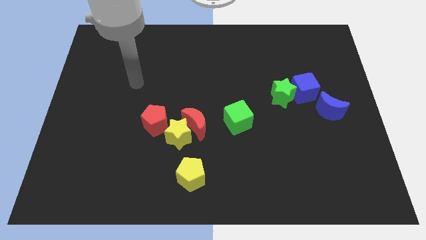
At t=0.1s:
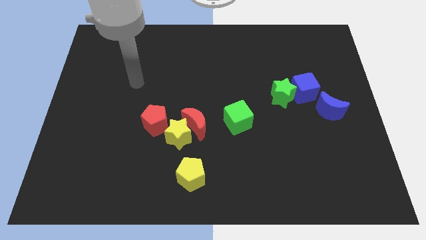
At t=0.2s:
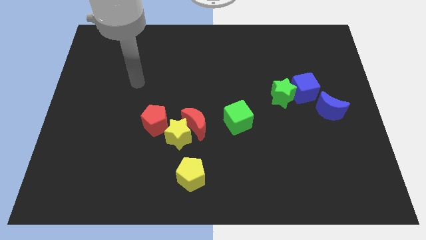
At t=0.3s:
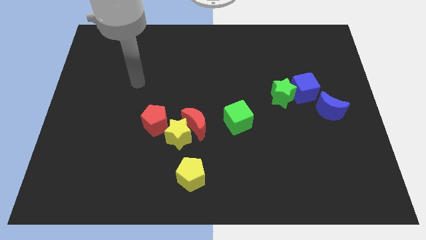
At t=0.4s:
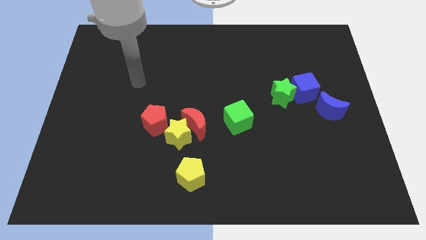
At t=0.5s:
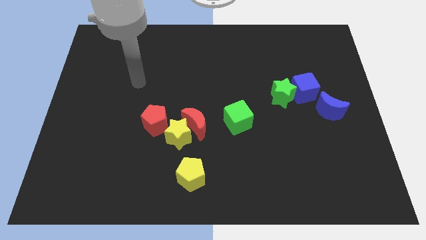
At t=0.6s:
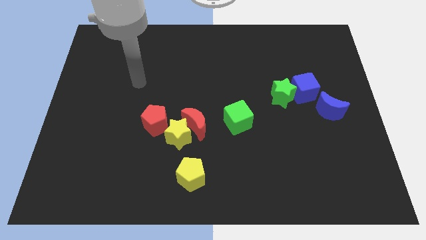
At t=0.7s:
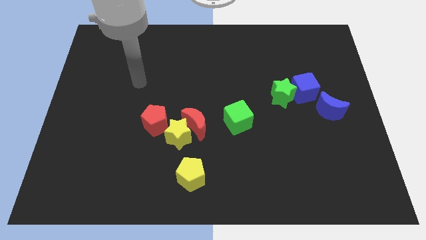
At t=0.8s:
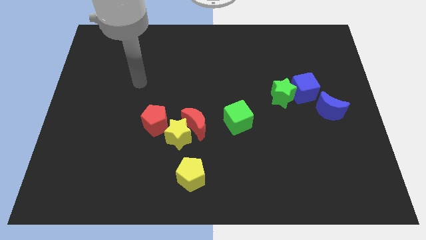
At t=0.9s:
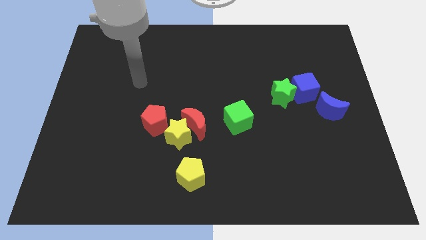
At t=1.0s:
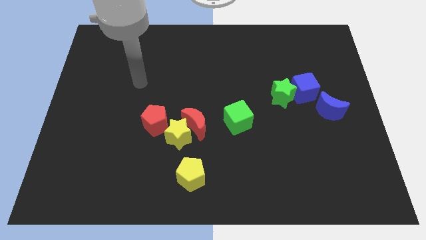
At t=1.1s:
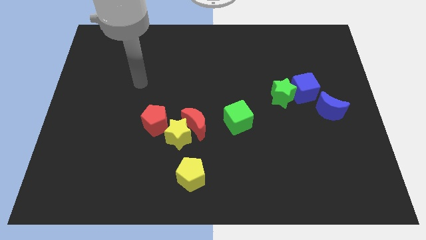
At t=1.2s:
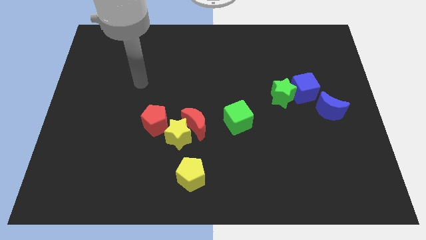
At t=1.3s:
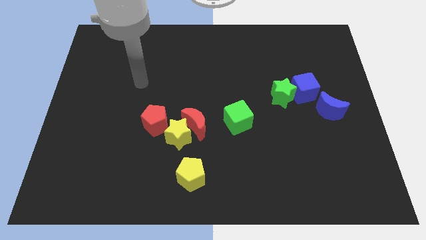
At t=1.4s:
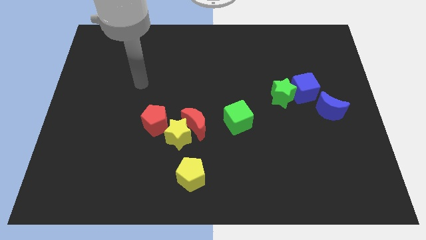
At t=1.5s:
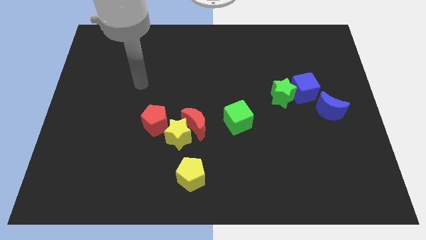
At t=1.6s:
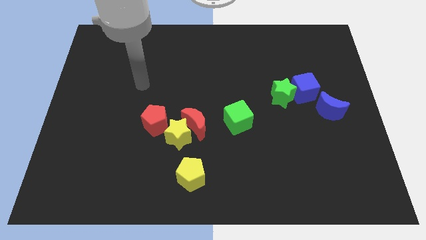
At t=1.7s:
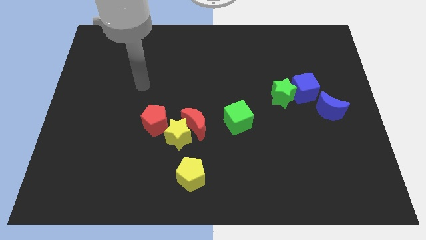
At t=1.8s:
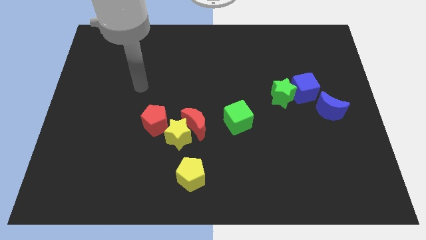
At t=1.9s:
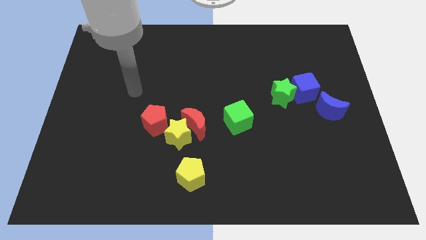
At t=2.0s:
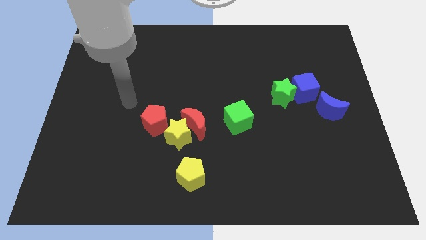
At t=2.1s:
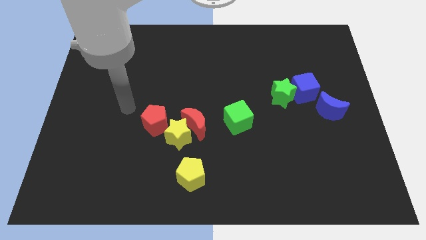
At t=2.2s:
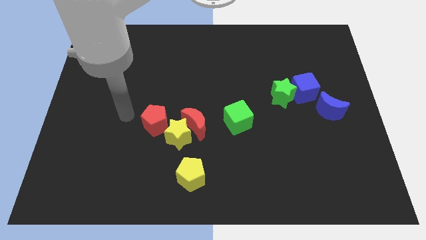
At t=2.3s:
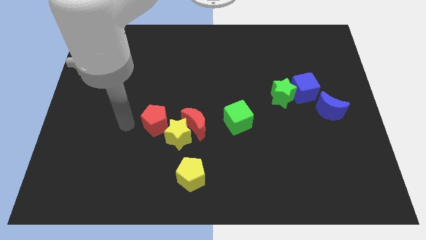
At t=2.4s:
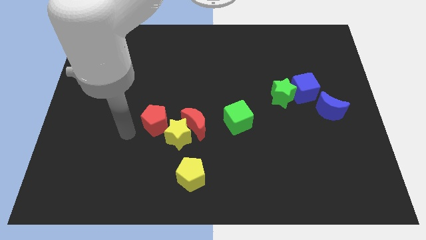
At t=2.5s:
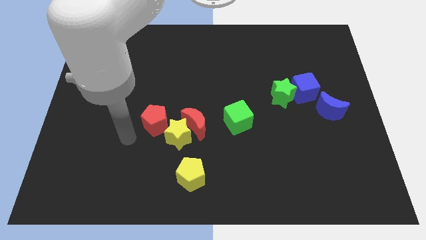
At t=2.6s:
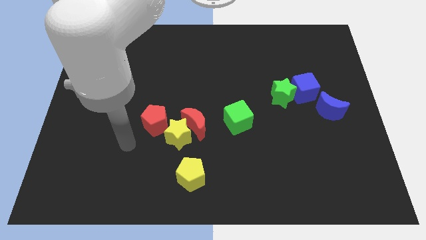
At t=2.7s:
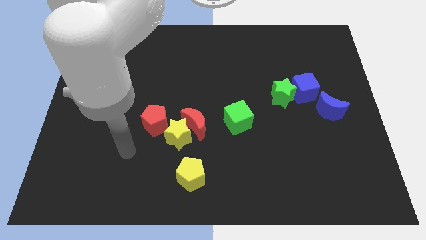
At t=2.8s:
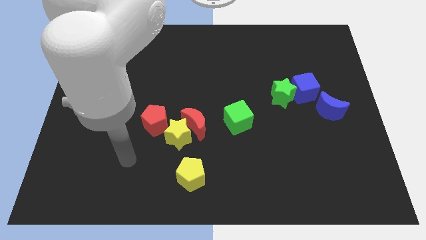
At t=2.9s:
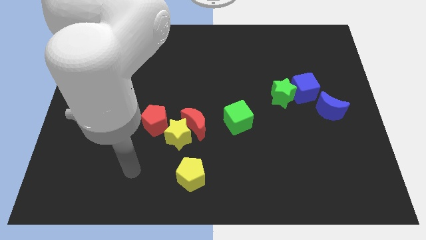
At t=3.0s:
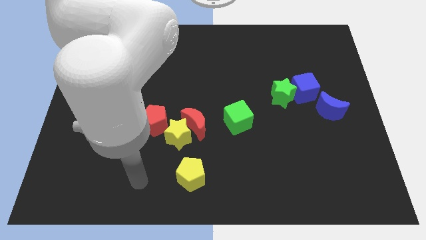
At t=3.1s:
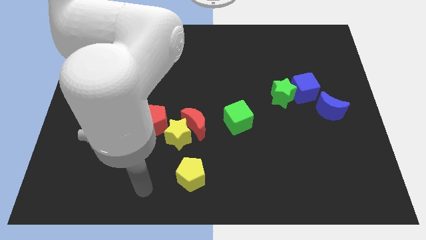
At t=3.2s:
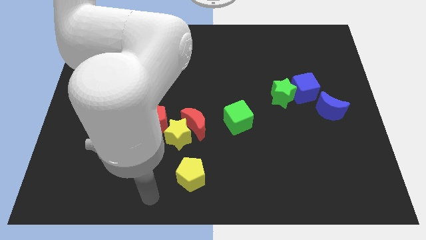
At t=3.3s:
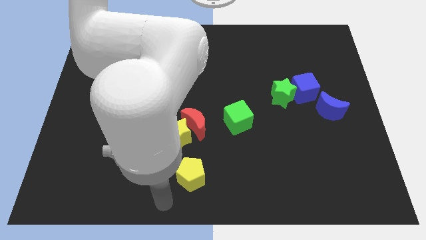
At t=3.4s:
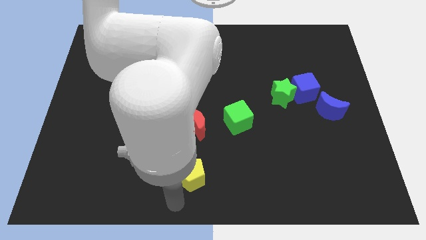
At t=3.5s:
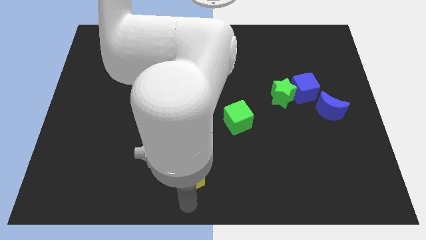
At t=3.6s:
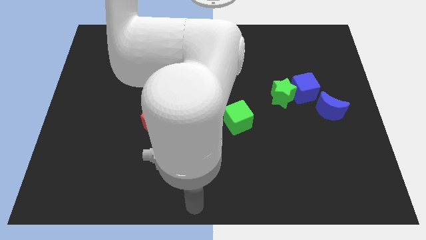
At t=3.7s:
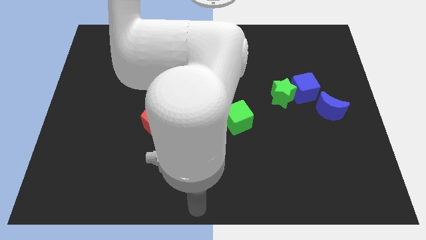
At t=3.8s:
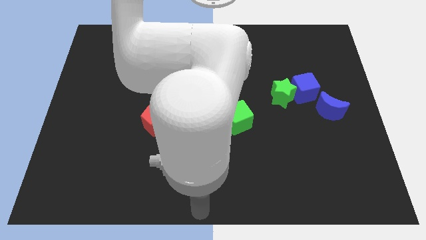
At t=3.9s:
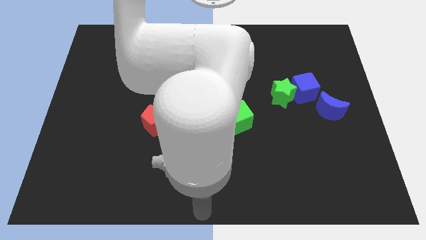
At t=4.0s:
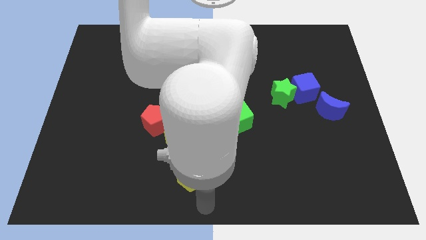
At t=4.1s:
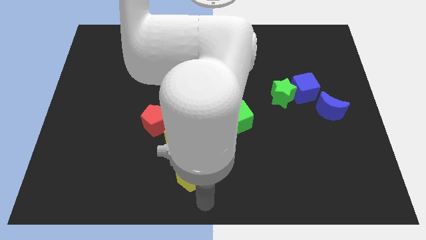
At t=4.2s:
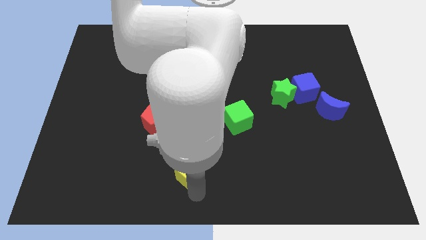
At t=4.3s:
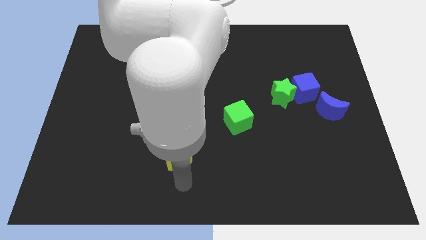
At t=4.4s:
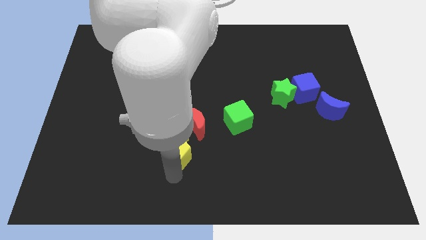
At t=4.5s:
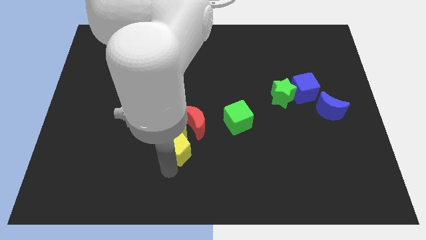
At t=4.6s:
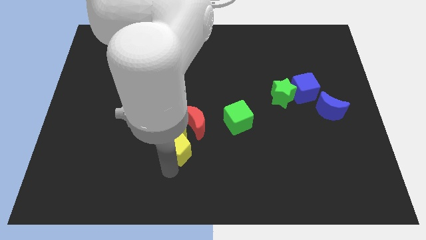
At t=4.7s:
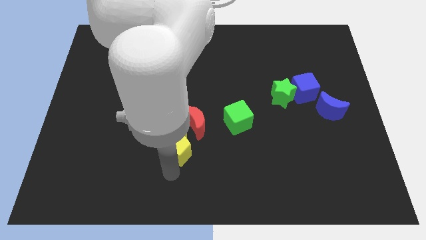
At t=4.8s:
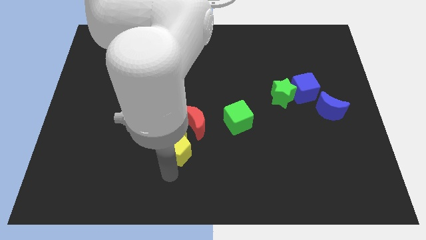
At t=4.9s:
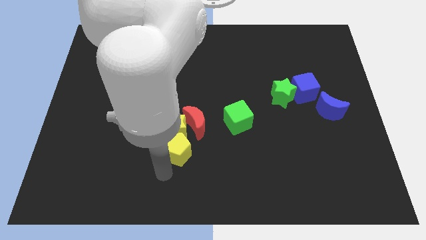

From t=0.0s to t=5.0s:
push the yellow pentagon slightly upwards

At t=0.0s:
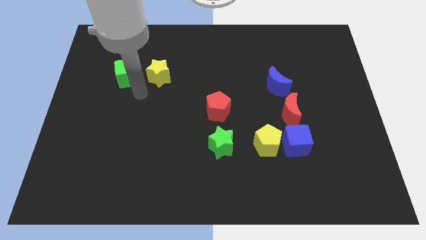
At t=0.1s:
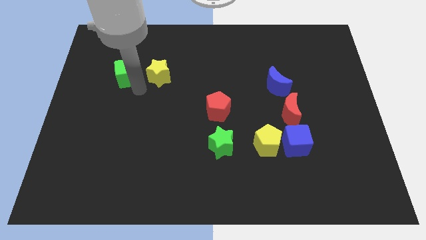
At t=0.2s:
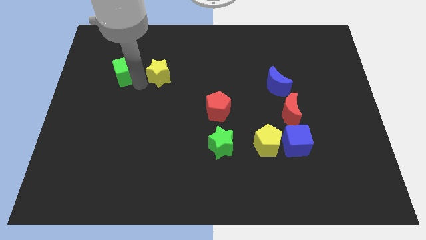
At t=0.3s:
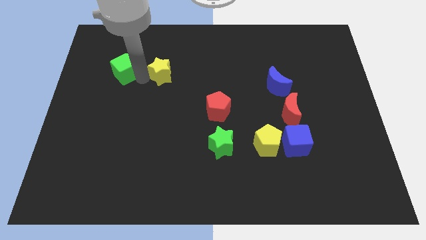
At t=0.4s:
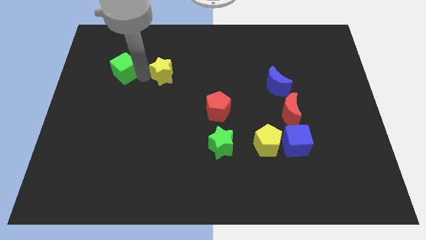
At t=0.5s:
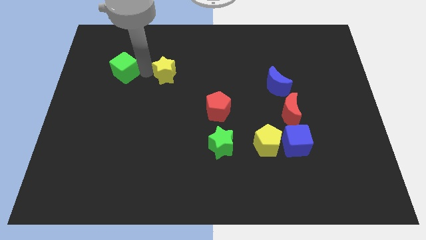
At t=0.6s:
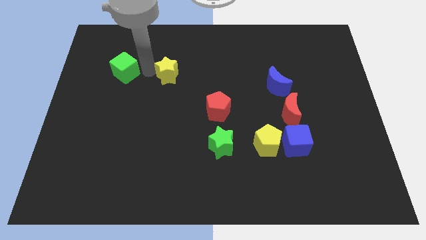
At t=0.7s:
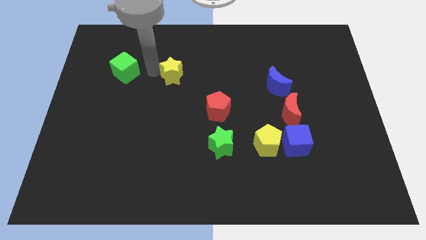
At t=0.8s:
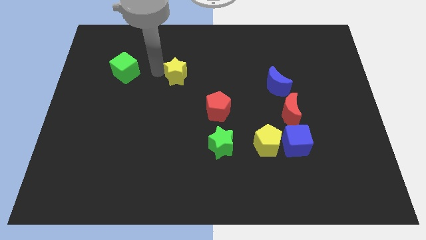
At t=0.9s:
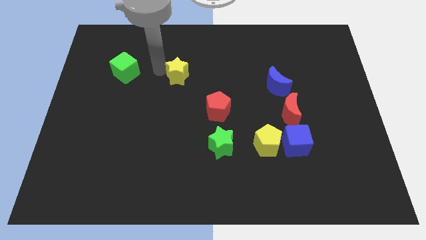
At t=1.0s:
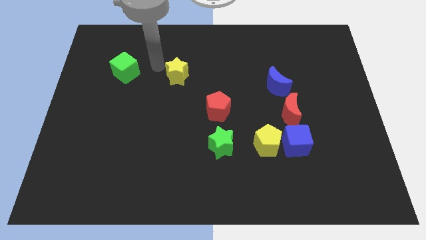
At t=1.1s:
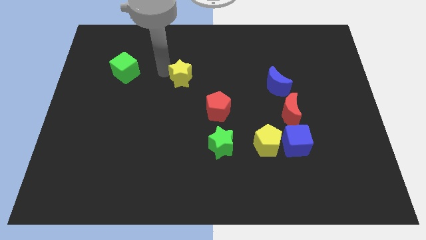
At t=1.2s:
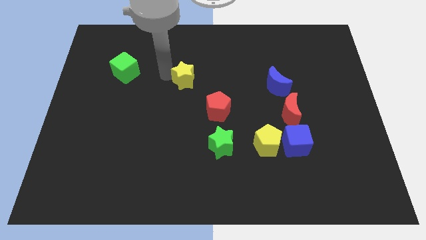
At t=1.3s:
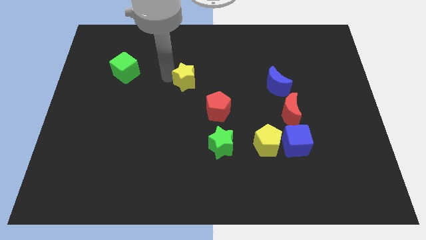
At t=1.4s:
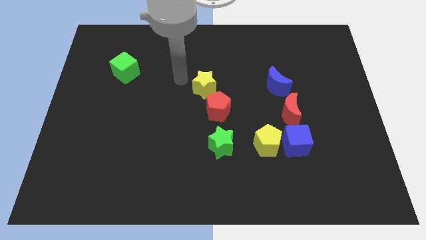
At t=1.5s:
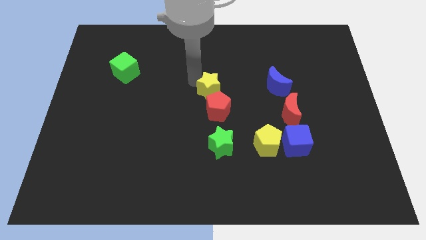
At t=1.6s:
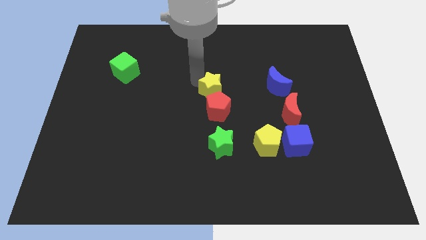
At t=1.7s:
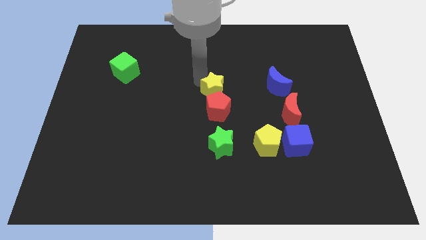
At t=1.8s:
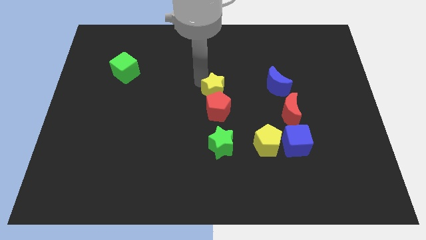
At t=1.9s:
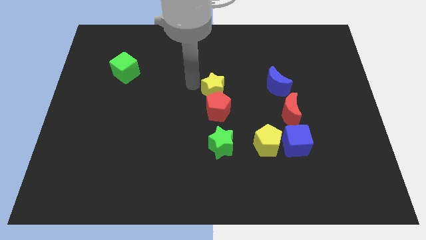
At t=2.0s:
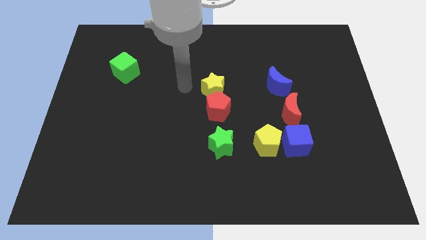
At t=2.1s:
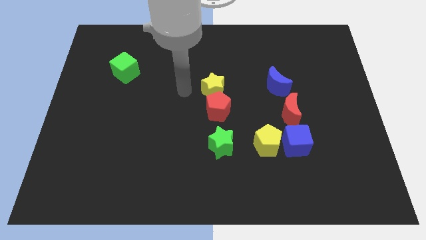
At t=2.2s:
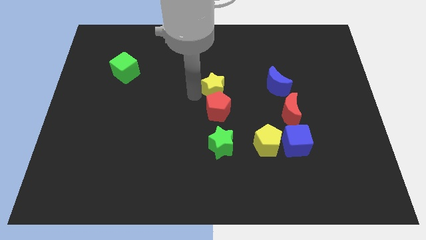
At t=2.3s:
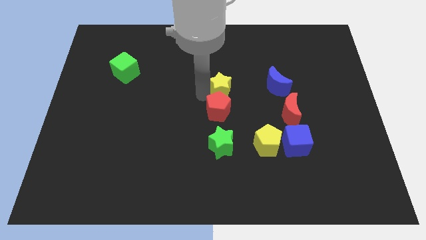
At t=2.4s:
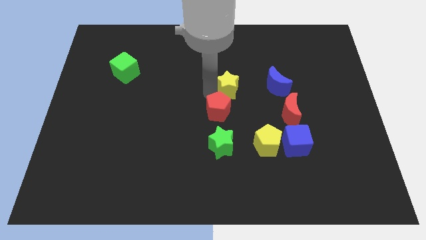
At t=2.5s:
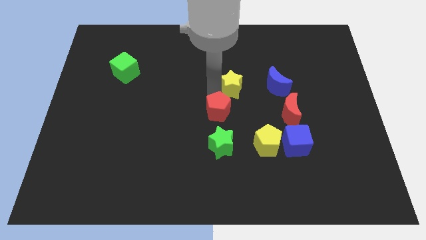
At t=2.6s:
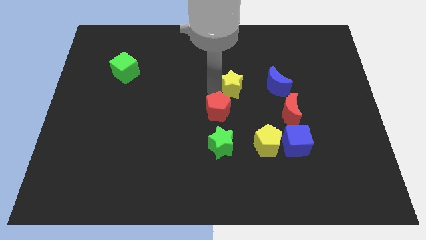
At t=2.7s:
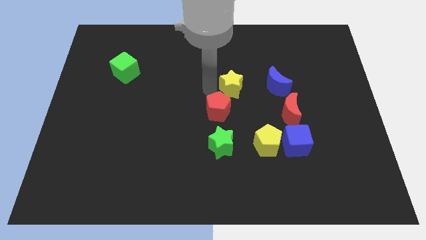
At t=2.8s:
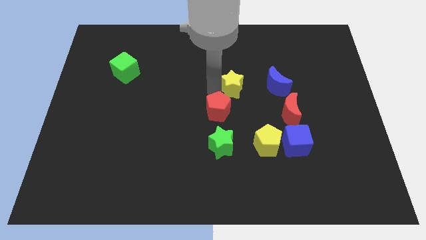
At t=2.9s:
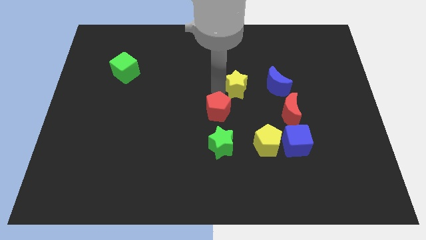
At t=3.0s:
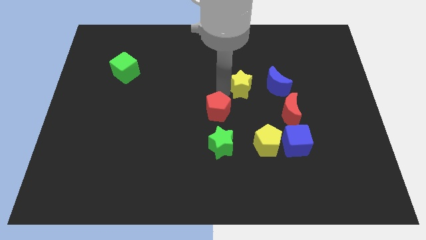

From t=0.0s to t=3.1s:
push the yellow star to the right top of the red pentagon

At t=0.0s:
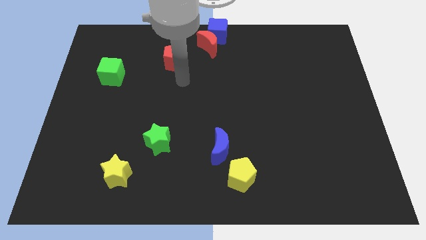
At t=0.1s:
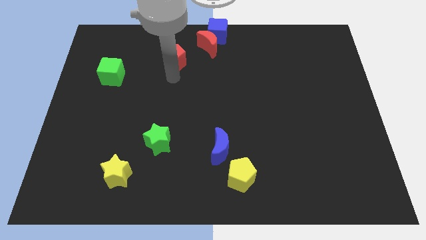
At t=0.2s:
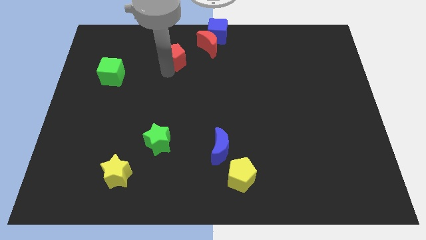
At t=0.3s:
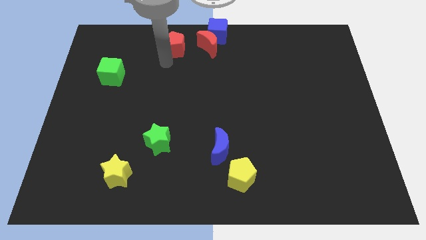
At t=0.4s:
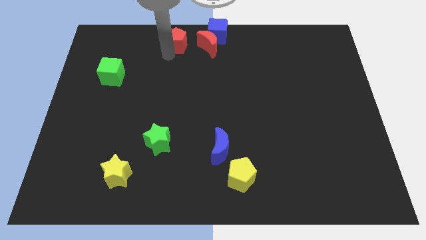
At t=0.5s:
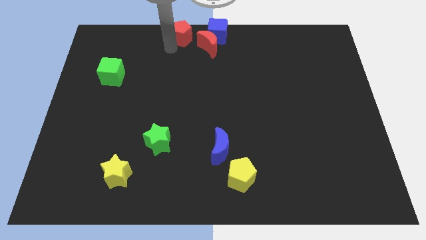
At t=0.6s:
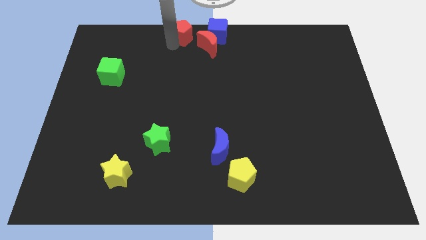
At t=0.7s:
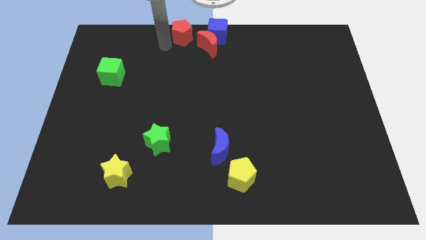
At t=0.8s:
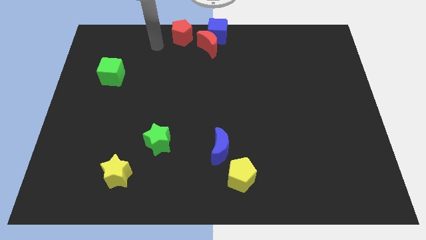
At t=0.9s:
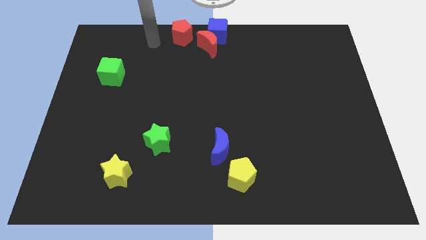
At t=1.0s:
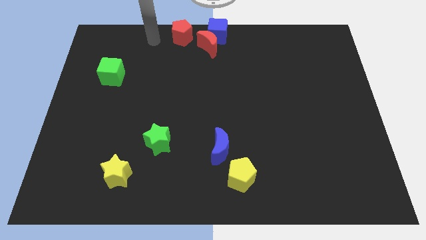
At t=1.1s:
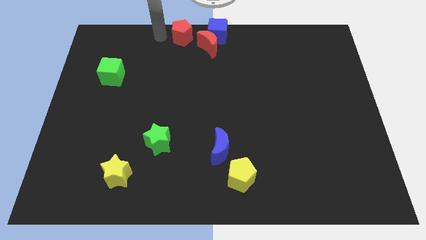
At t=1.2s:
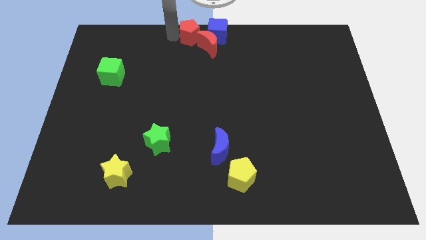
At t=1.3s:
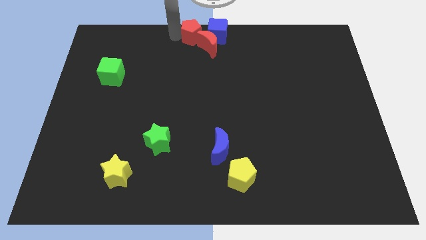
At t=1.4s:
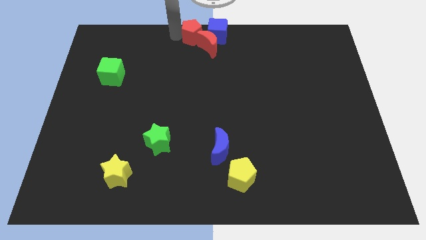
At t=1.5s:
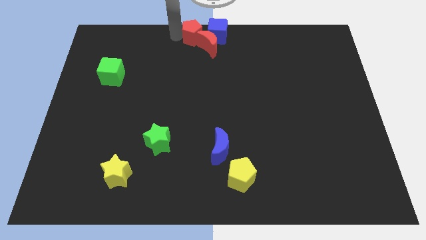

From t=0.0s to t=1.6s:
slide the red pentagon towards the top center of the board
